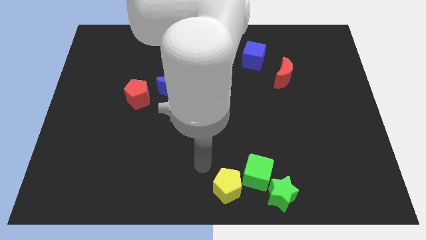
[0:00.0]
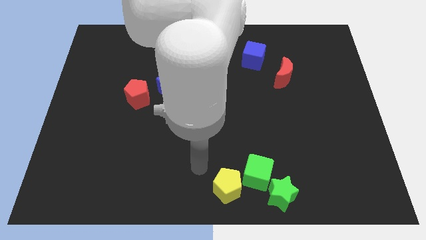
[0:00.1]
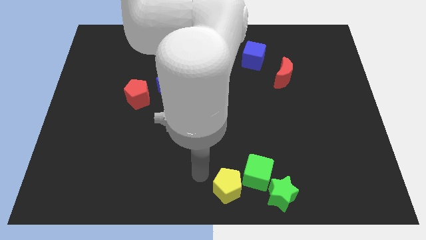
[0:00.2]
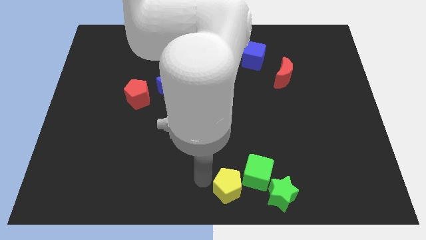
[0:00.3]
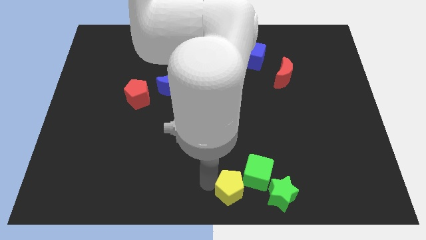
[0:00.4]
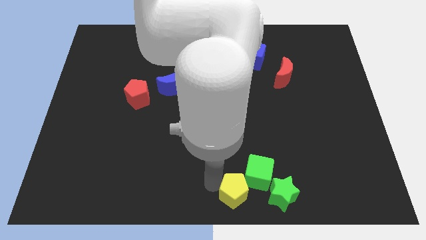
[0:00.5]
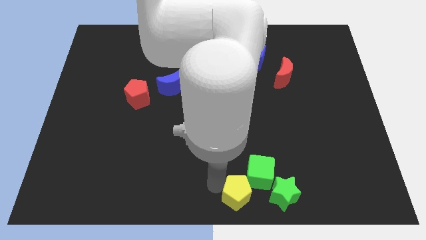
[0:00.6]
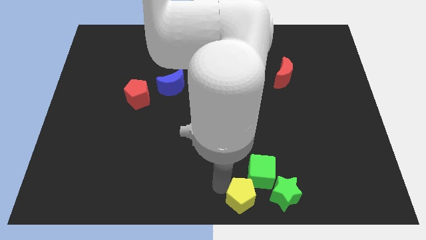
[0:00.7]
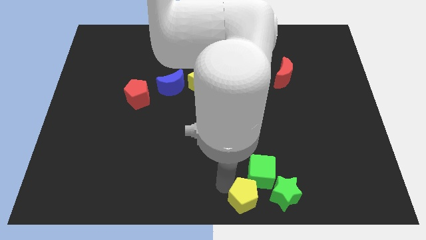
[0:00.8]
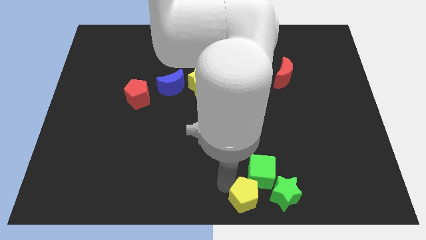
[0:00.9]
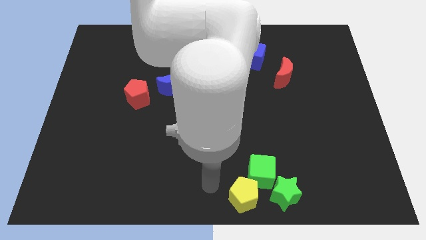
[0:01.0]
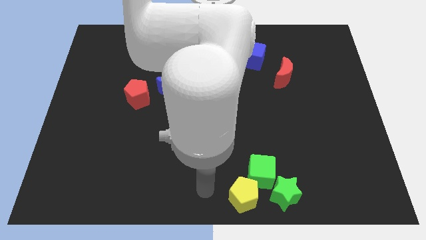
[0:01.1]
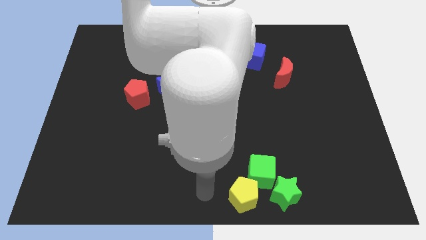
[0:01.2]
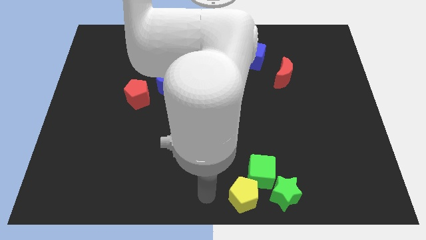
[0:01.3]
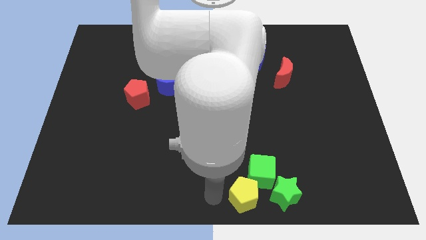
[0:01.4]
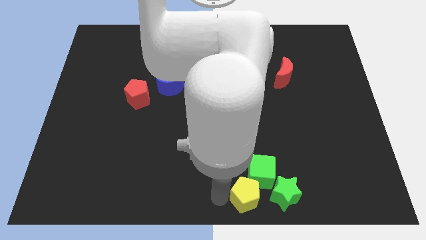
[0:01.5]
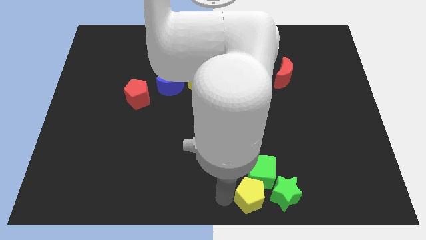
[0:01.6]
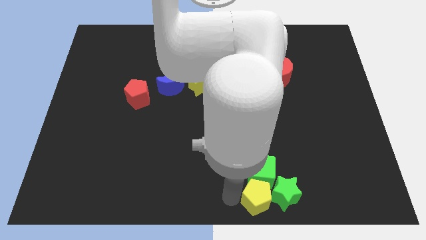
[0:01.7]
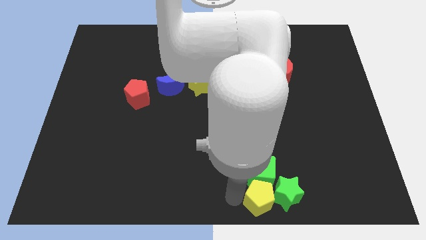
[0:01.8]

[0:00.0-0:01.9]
place the yellow pentagon below the green cube

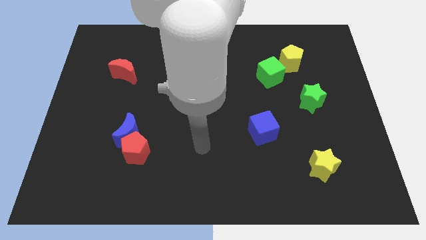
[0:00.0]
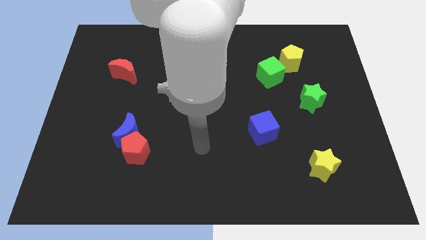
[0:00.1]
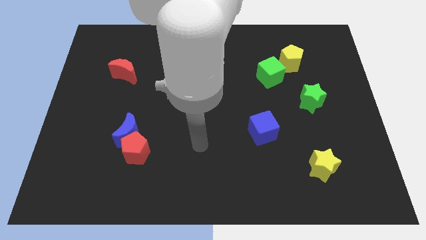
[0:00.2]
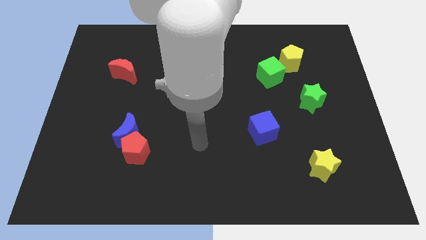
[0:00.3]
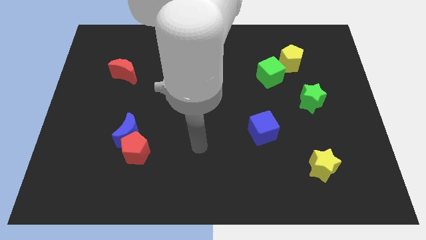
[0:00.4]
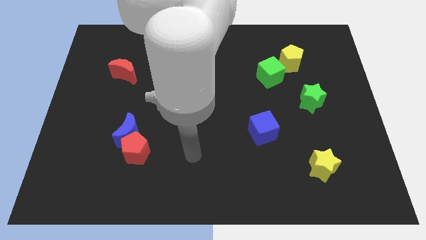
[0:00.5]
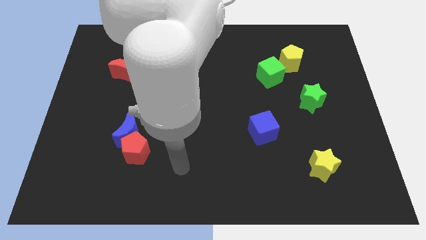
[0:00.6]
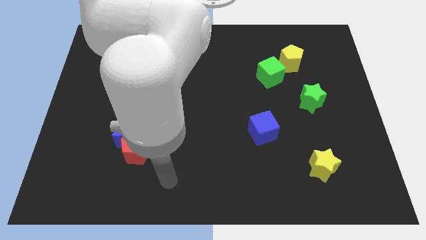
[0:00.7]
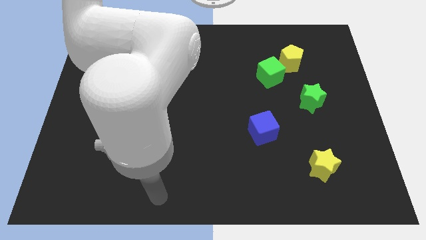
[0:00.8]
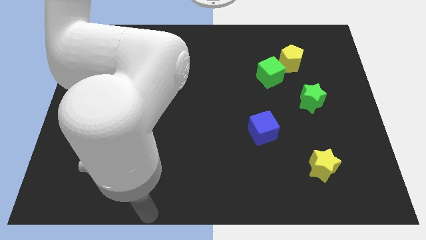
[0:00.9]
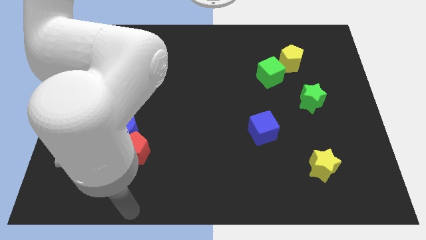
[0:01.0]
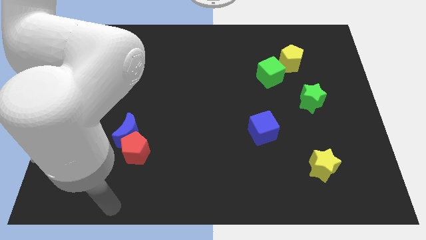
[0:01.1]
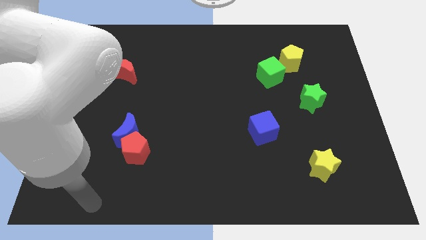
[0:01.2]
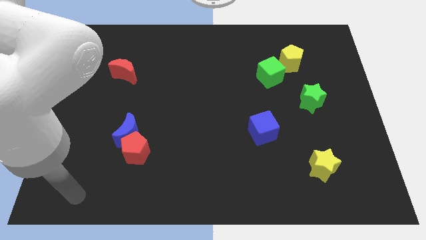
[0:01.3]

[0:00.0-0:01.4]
move your arm towards bottom center

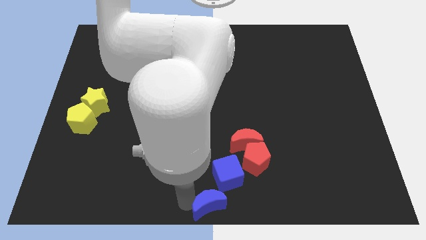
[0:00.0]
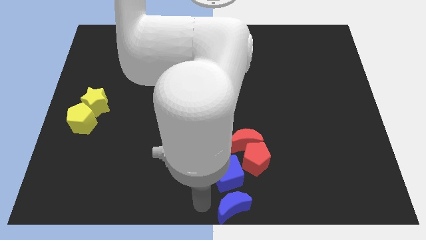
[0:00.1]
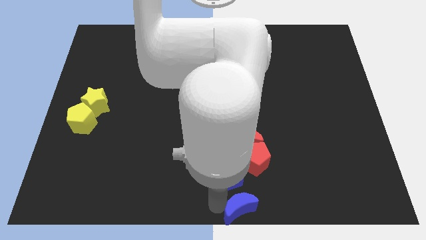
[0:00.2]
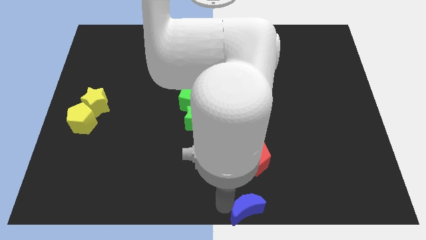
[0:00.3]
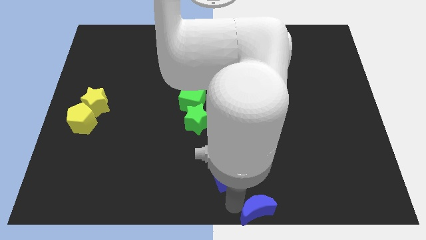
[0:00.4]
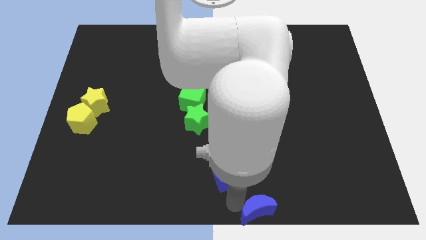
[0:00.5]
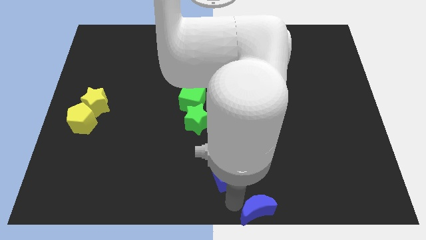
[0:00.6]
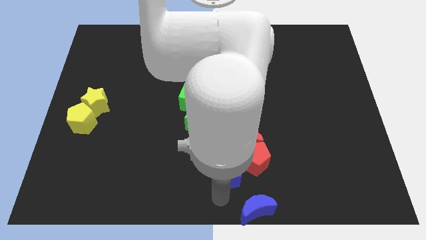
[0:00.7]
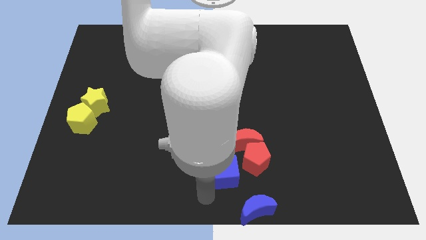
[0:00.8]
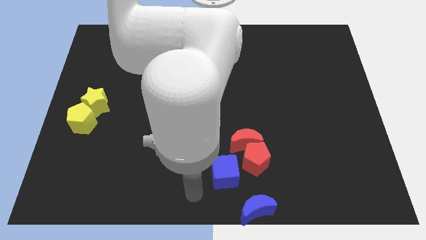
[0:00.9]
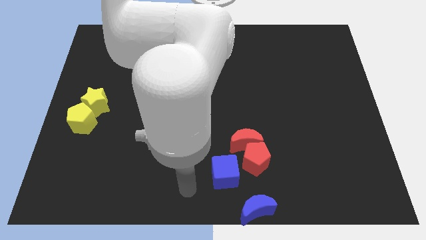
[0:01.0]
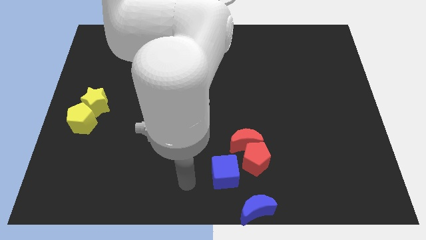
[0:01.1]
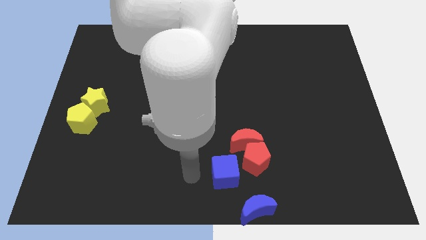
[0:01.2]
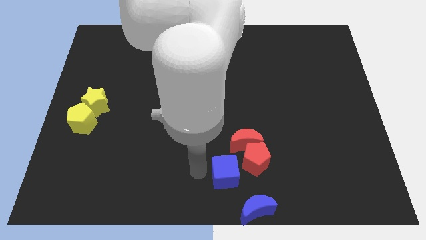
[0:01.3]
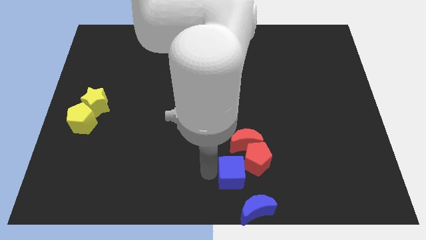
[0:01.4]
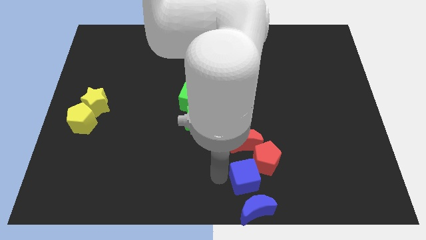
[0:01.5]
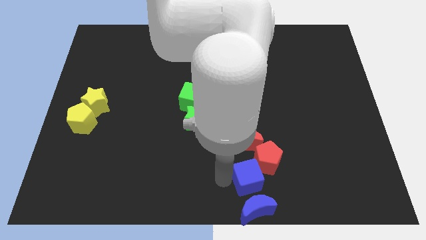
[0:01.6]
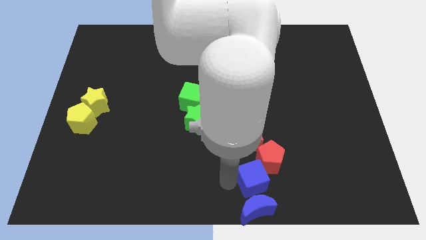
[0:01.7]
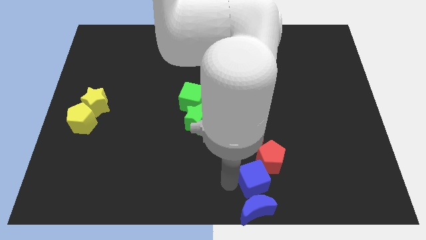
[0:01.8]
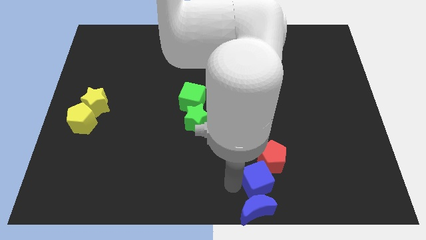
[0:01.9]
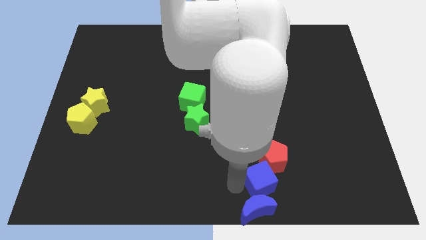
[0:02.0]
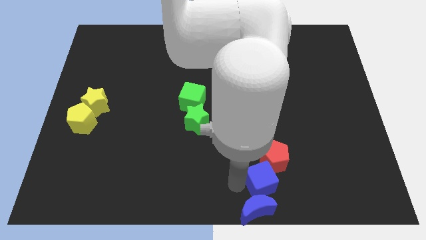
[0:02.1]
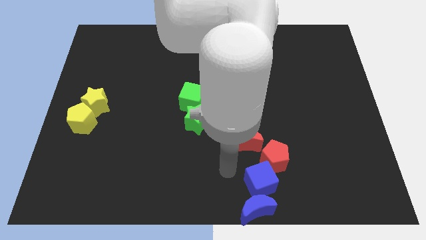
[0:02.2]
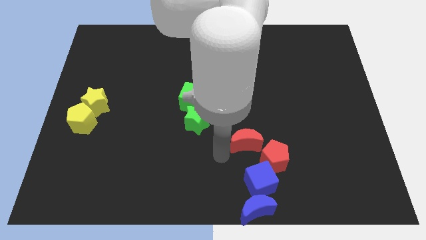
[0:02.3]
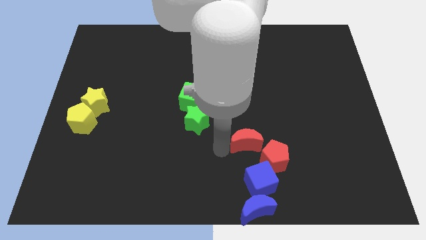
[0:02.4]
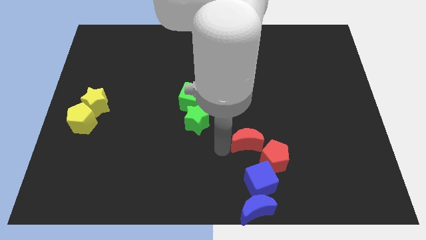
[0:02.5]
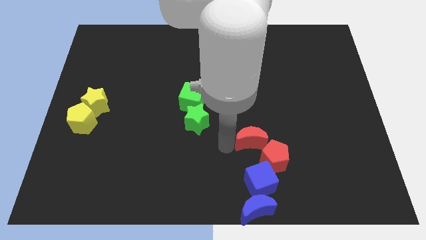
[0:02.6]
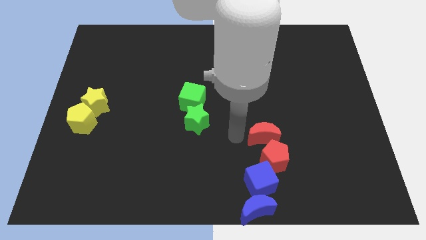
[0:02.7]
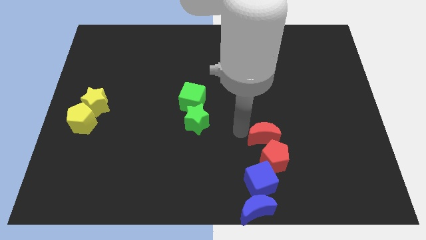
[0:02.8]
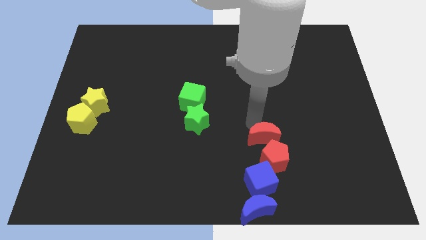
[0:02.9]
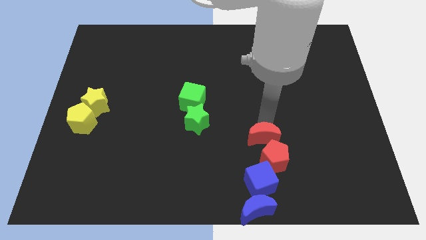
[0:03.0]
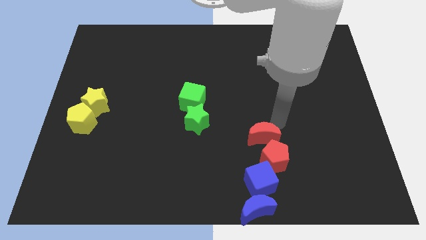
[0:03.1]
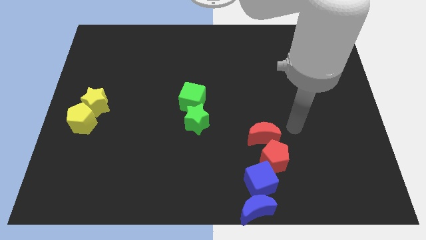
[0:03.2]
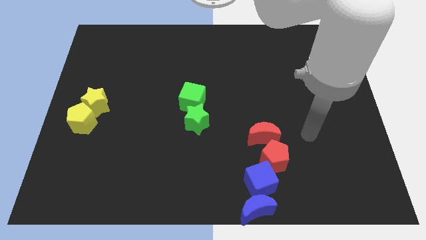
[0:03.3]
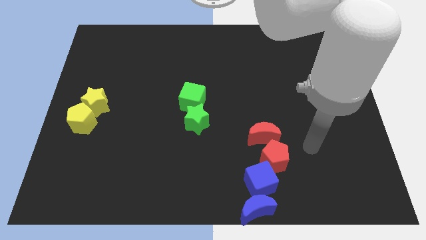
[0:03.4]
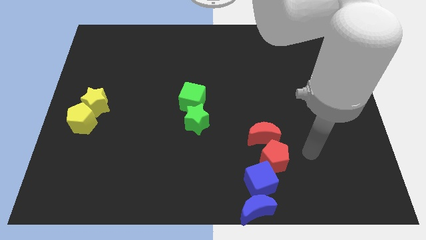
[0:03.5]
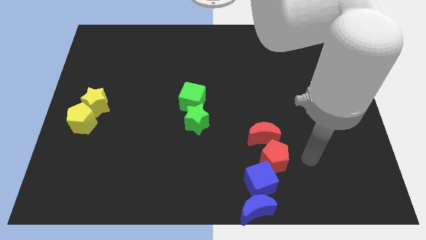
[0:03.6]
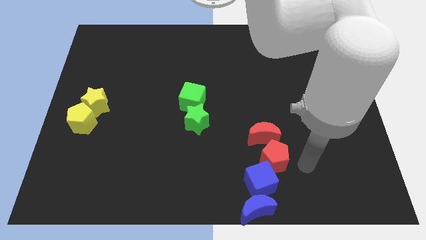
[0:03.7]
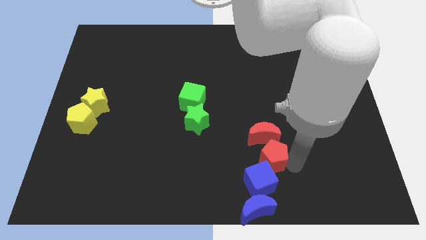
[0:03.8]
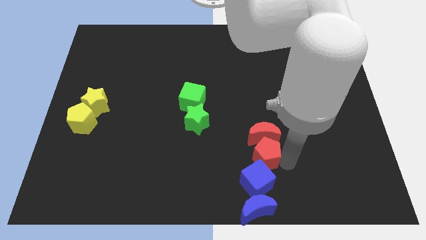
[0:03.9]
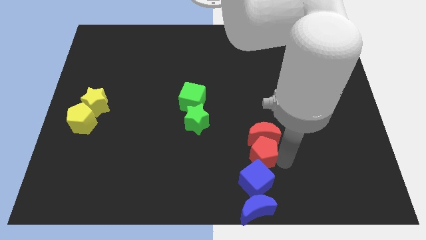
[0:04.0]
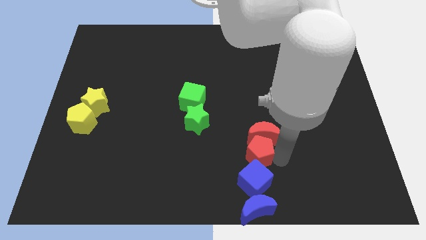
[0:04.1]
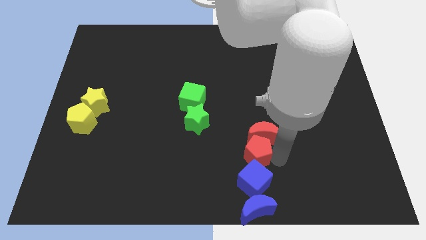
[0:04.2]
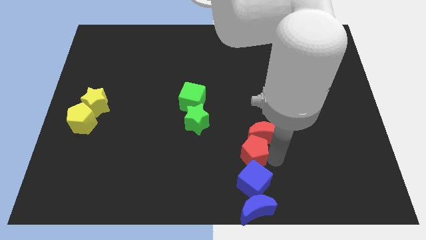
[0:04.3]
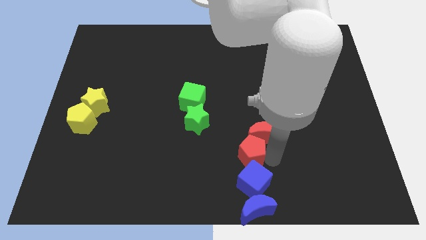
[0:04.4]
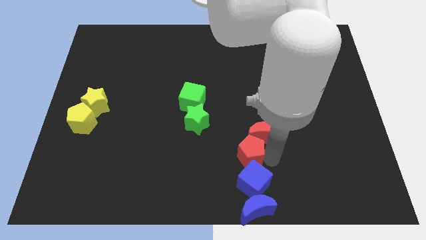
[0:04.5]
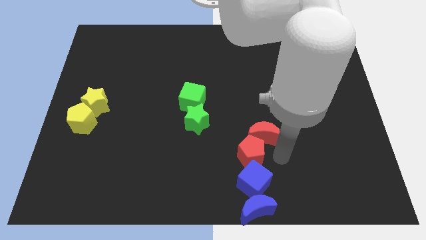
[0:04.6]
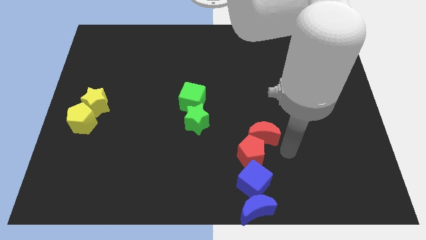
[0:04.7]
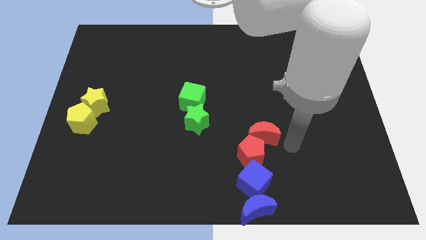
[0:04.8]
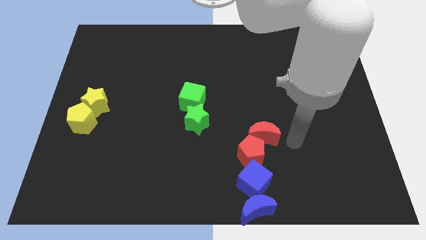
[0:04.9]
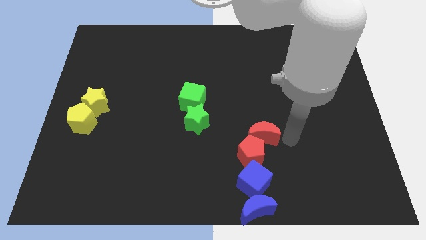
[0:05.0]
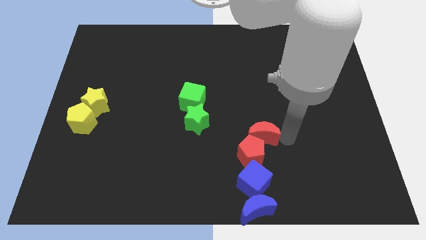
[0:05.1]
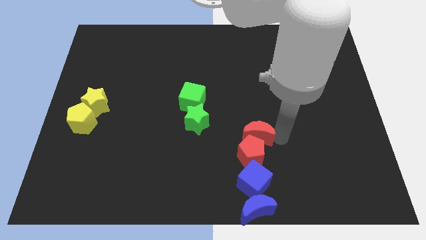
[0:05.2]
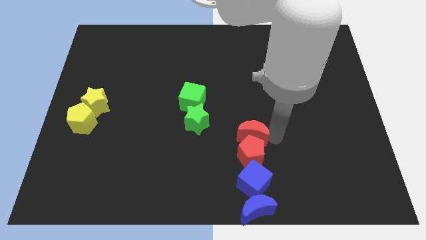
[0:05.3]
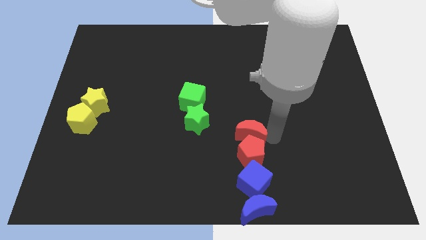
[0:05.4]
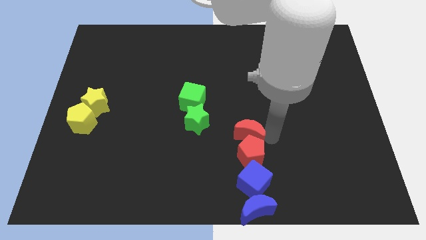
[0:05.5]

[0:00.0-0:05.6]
place the blue moonblue cubered pentagon and the red moon together to form a straight vertical line

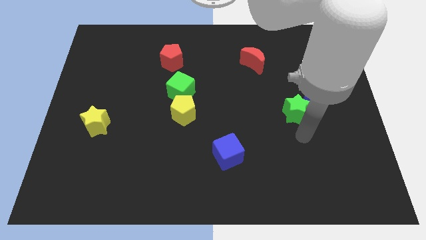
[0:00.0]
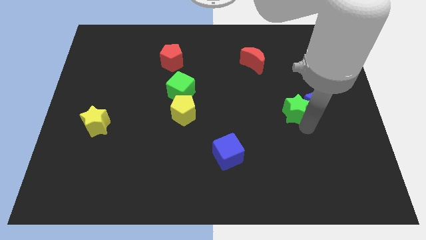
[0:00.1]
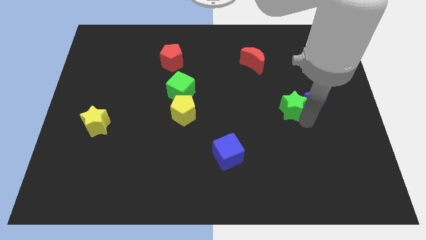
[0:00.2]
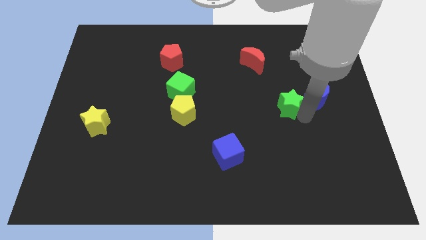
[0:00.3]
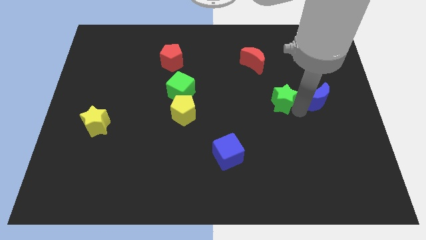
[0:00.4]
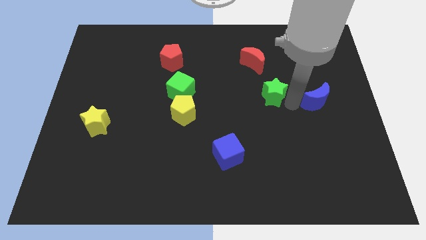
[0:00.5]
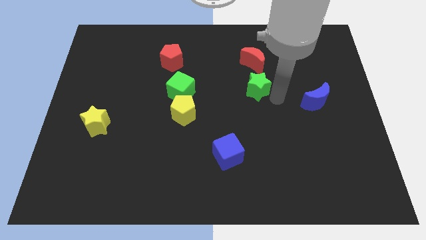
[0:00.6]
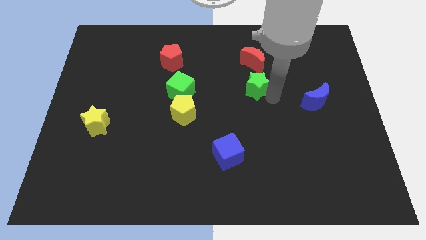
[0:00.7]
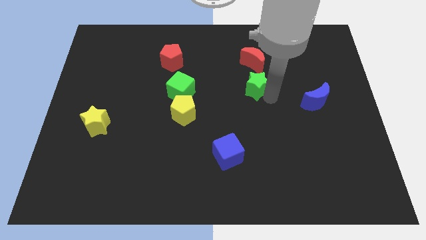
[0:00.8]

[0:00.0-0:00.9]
place green star to the bottom of red moon
